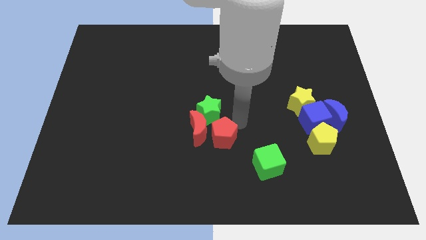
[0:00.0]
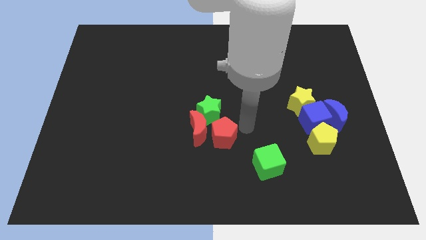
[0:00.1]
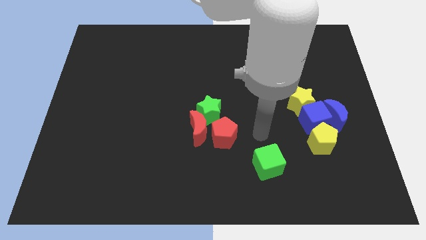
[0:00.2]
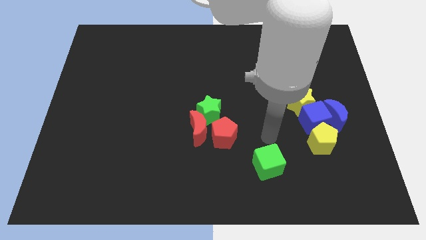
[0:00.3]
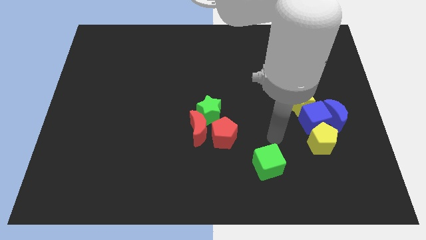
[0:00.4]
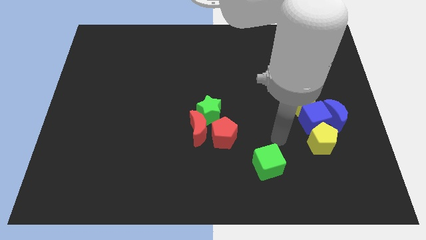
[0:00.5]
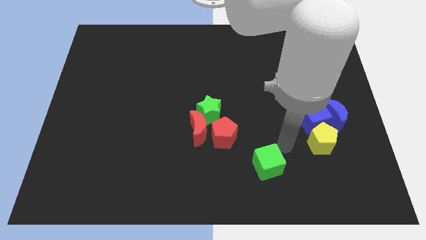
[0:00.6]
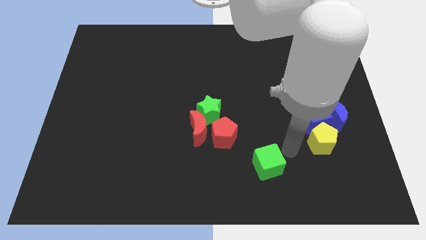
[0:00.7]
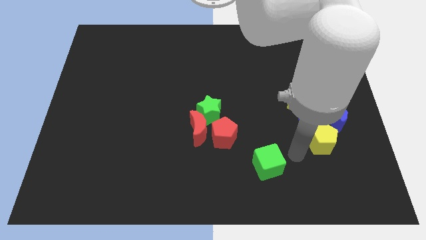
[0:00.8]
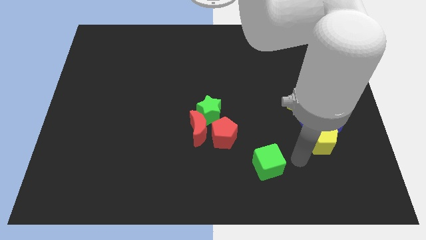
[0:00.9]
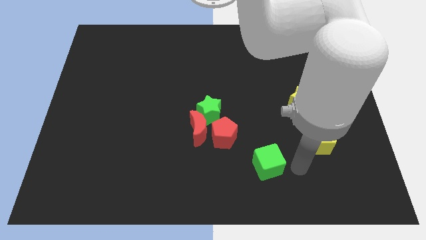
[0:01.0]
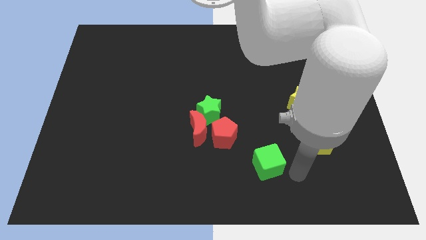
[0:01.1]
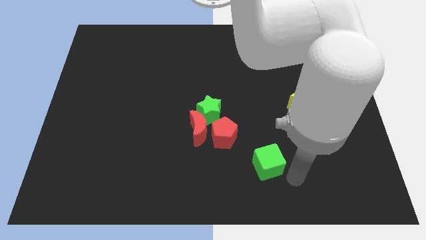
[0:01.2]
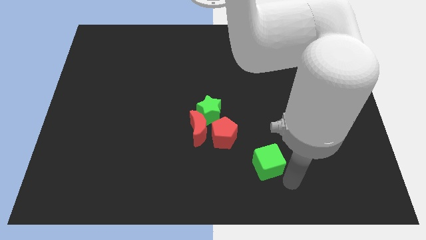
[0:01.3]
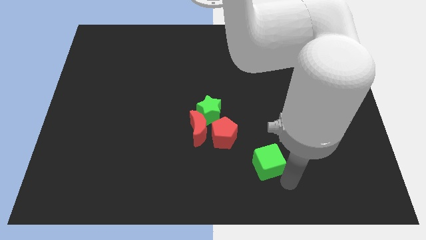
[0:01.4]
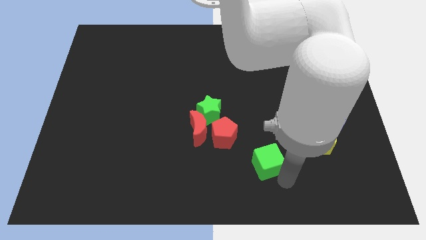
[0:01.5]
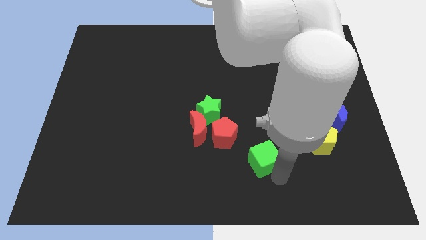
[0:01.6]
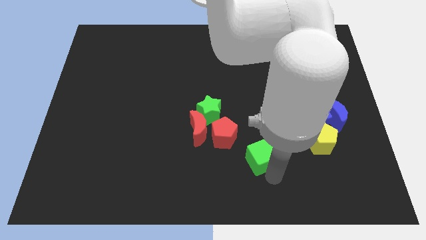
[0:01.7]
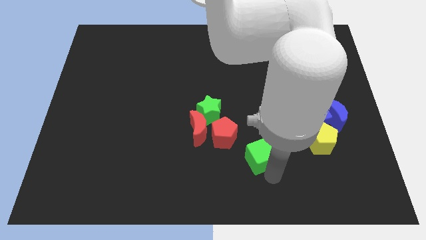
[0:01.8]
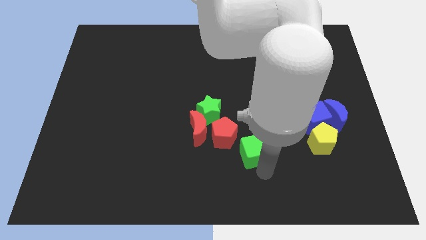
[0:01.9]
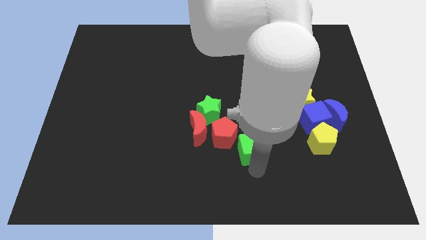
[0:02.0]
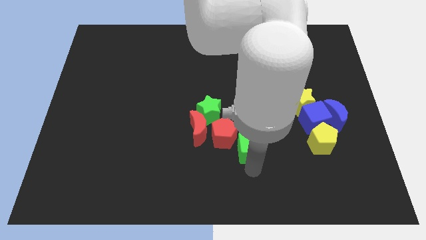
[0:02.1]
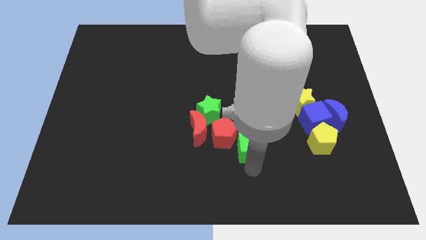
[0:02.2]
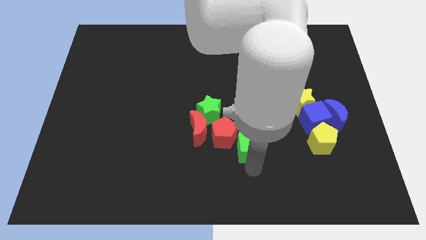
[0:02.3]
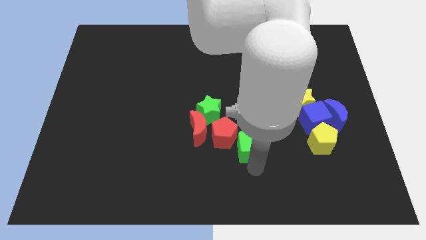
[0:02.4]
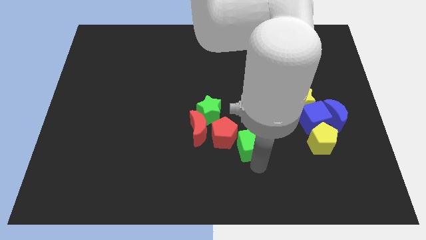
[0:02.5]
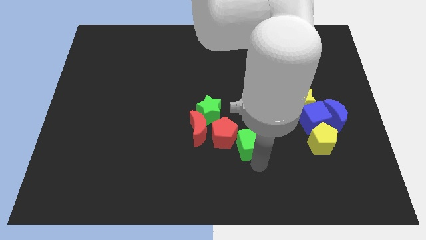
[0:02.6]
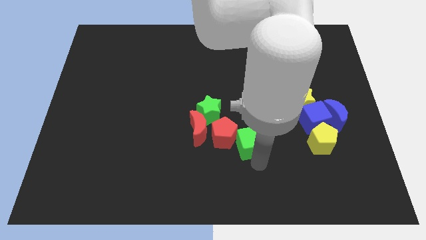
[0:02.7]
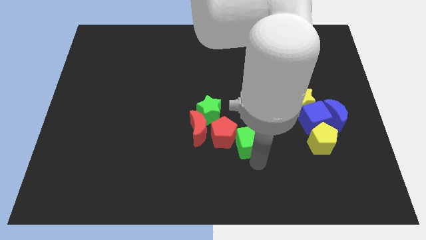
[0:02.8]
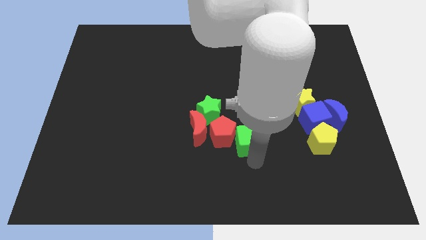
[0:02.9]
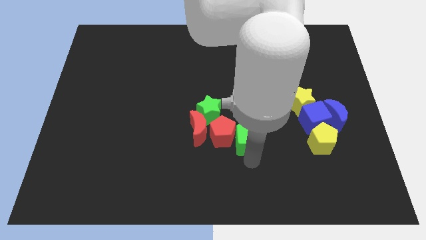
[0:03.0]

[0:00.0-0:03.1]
push the green cube into the red pentagon

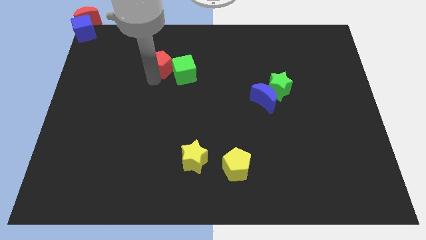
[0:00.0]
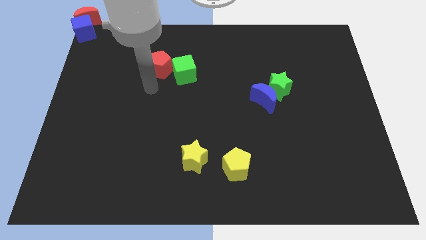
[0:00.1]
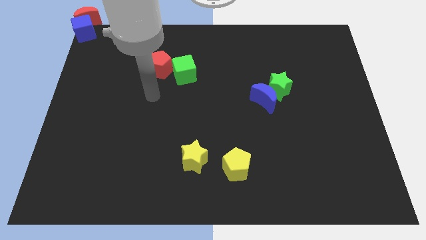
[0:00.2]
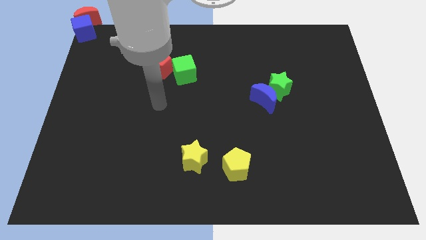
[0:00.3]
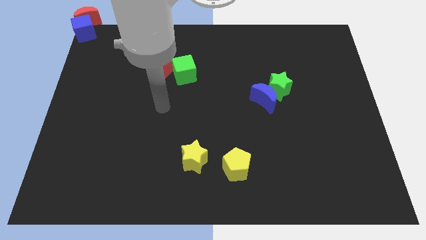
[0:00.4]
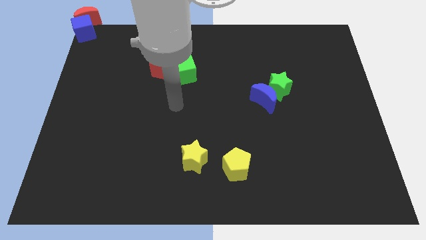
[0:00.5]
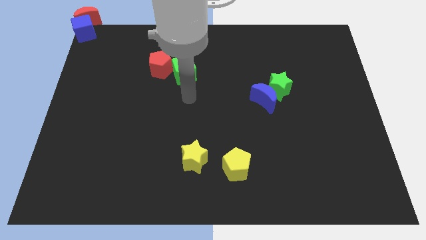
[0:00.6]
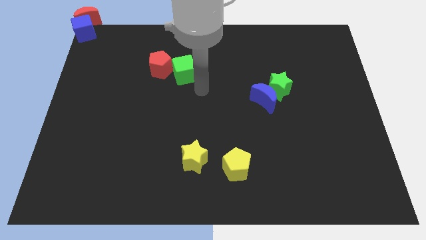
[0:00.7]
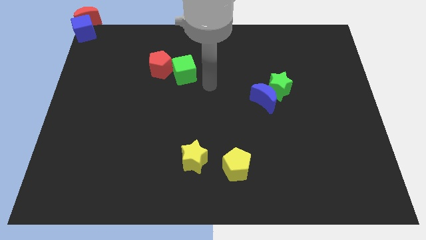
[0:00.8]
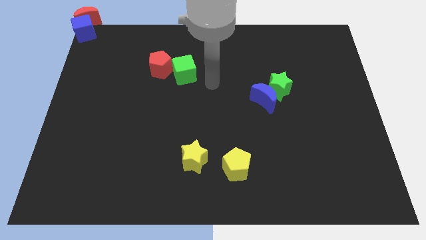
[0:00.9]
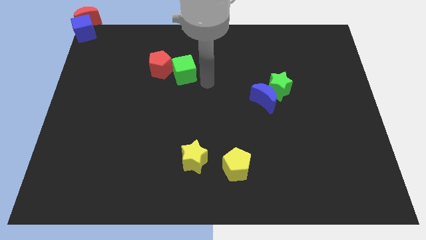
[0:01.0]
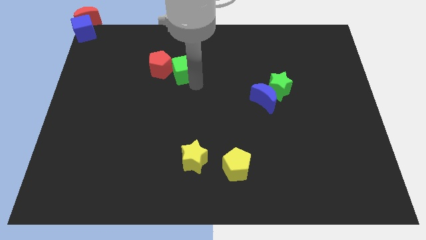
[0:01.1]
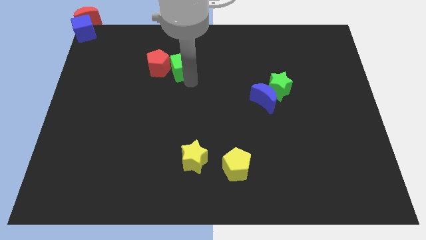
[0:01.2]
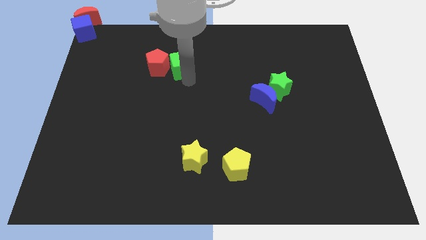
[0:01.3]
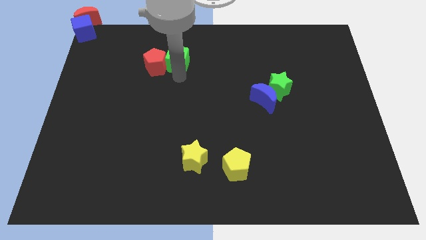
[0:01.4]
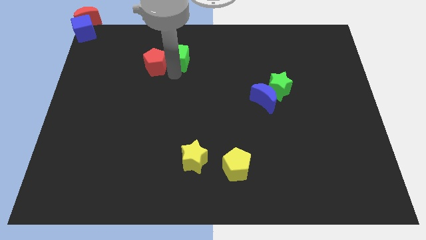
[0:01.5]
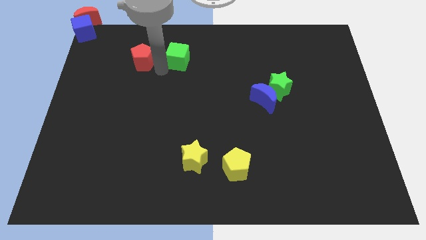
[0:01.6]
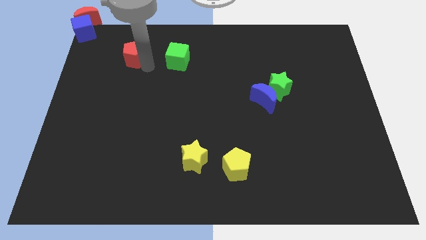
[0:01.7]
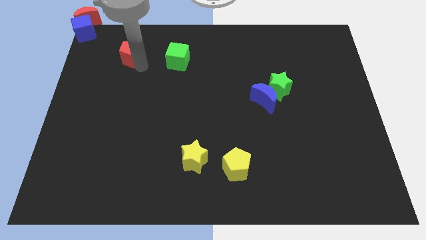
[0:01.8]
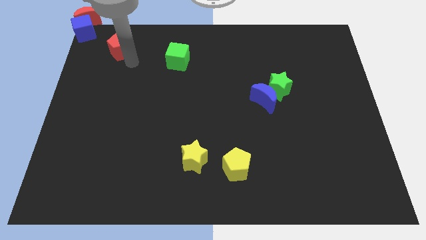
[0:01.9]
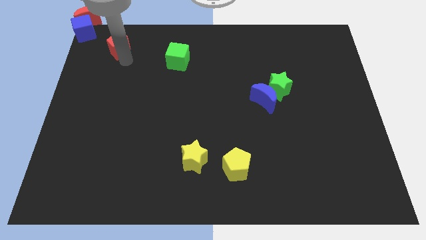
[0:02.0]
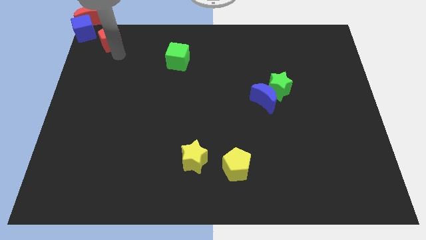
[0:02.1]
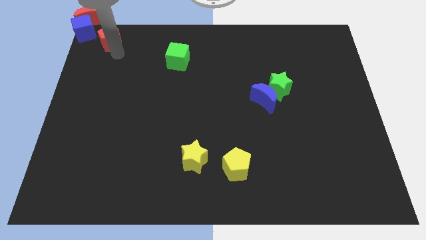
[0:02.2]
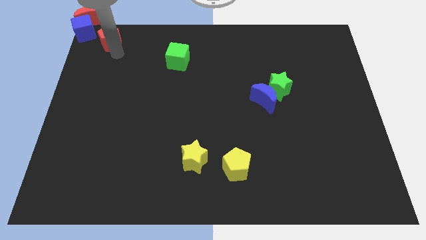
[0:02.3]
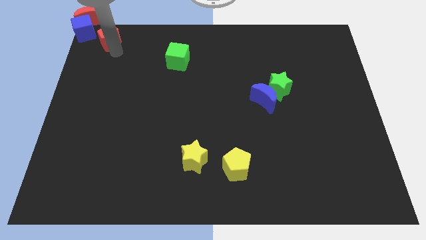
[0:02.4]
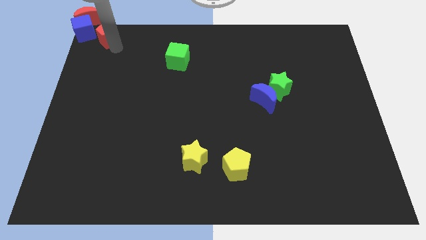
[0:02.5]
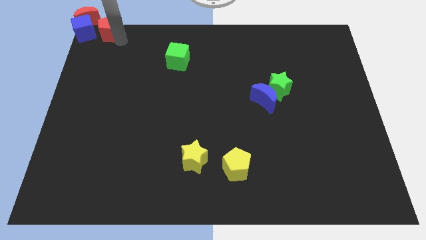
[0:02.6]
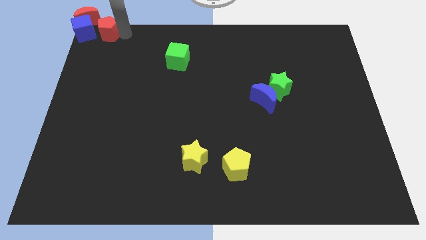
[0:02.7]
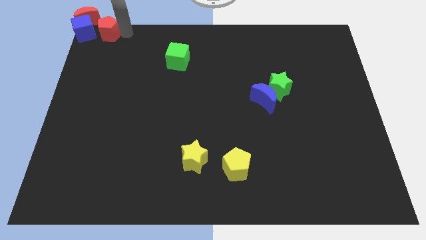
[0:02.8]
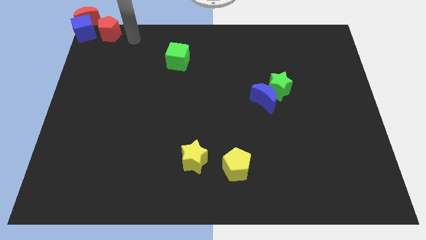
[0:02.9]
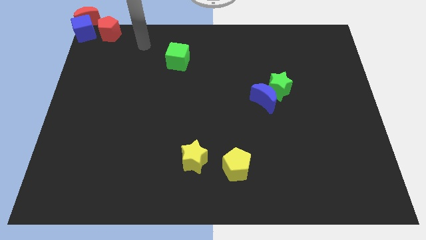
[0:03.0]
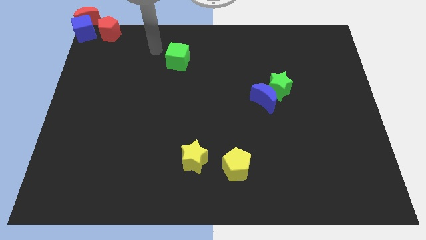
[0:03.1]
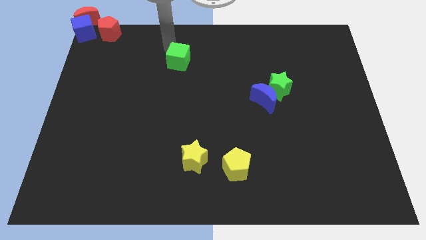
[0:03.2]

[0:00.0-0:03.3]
separate the red pentagon from green cube

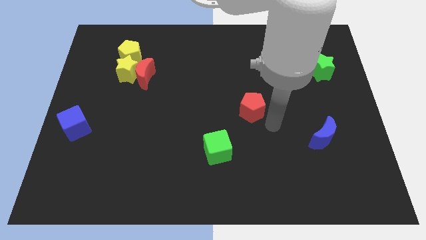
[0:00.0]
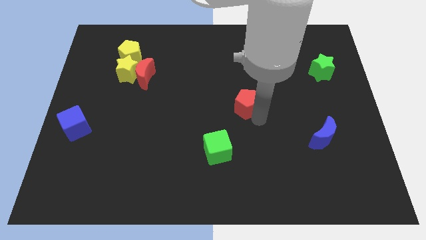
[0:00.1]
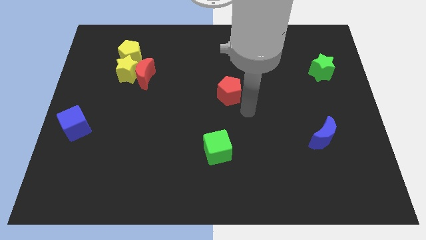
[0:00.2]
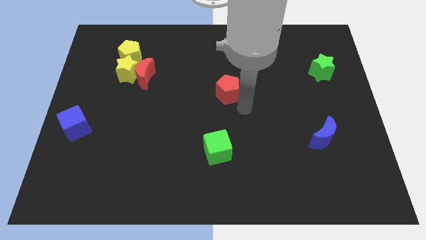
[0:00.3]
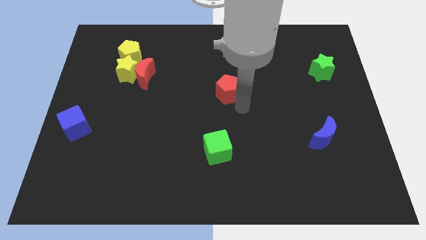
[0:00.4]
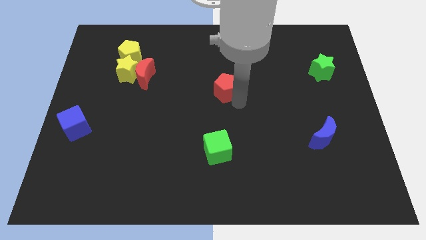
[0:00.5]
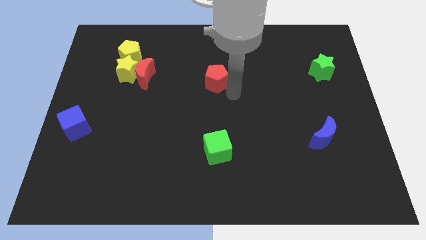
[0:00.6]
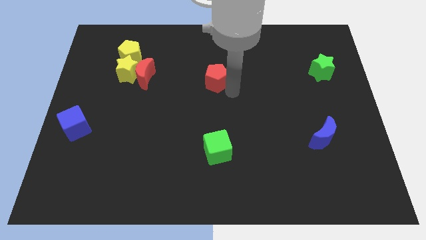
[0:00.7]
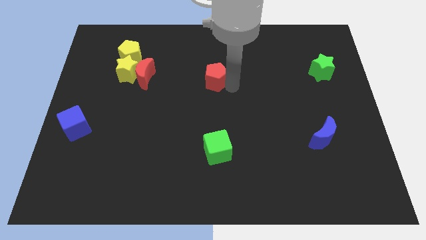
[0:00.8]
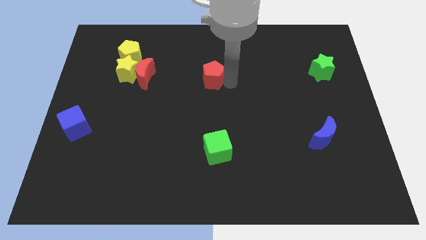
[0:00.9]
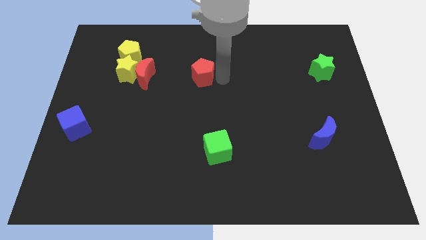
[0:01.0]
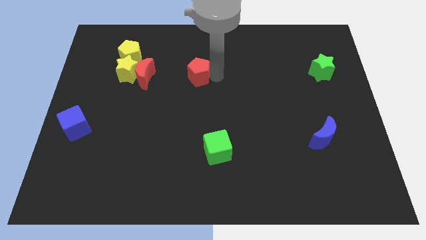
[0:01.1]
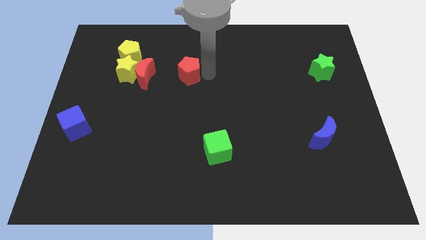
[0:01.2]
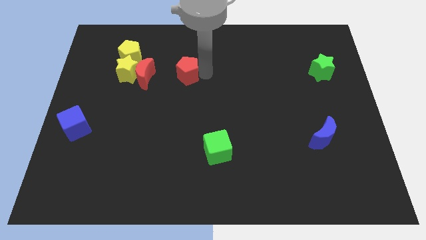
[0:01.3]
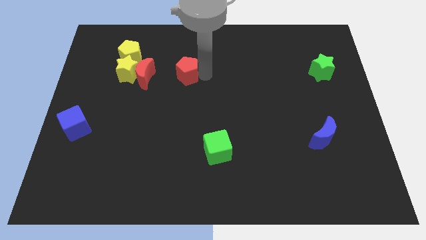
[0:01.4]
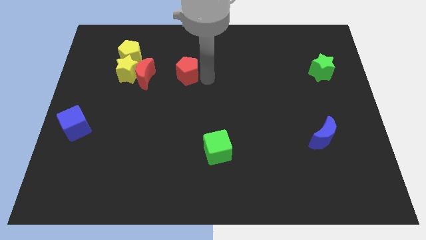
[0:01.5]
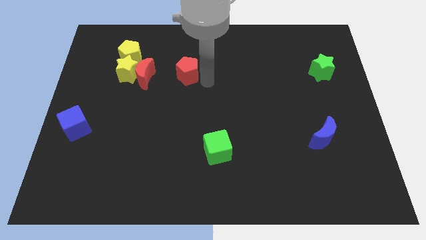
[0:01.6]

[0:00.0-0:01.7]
move the red pentagon left to the red moon

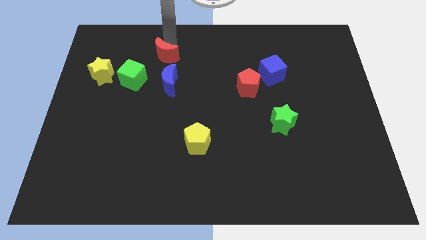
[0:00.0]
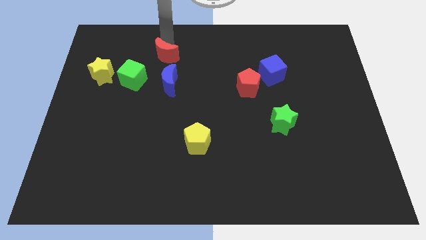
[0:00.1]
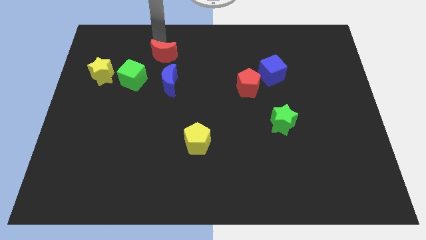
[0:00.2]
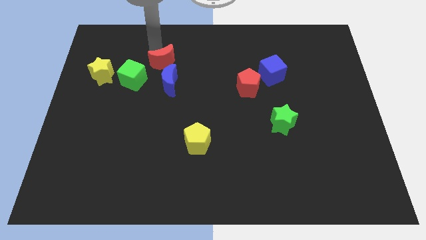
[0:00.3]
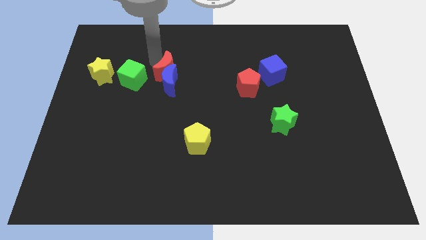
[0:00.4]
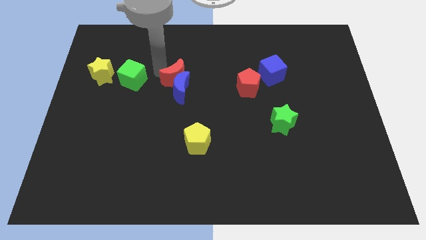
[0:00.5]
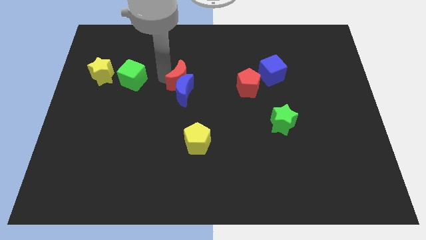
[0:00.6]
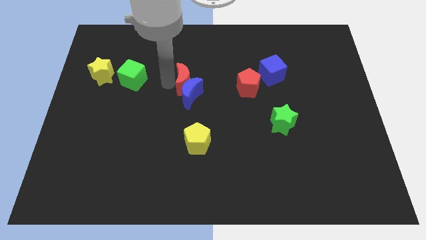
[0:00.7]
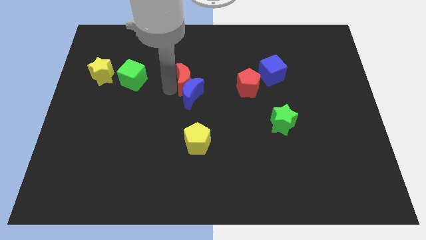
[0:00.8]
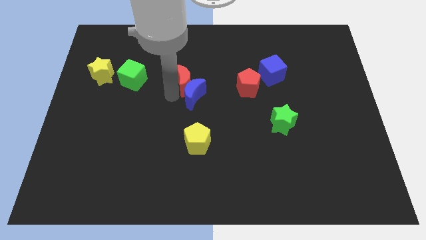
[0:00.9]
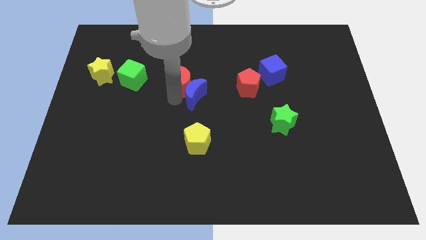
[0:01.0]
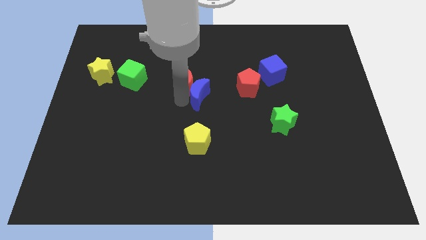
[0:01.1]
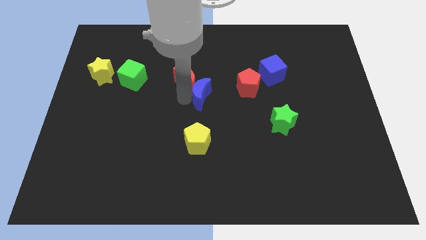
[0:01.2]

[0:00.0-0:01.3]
push the red crescent into the blue crescent
